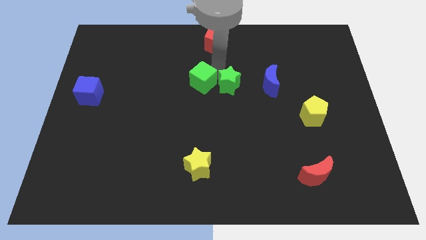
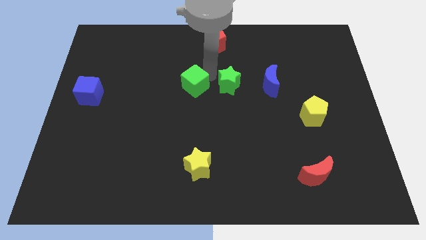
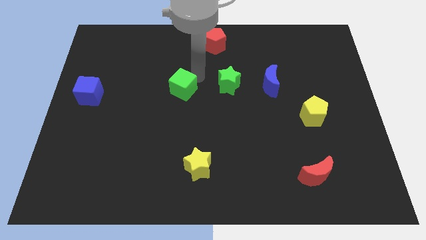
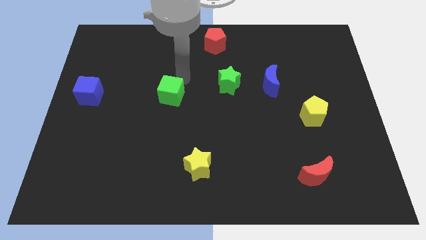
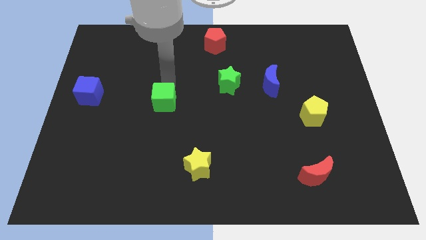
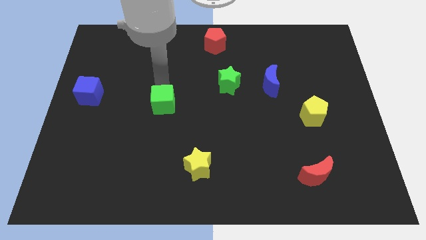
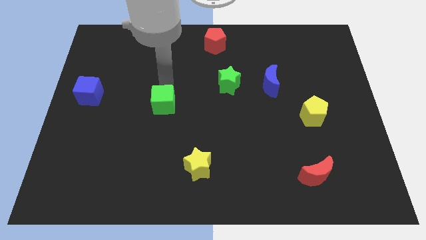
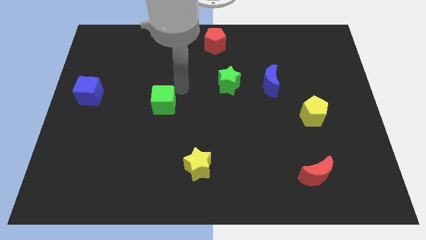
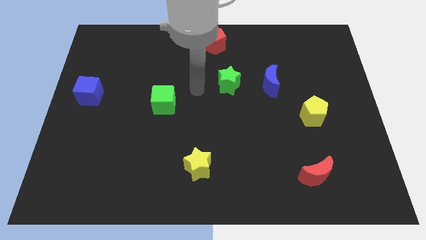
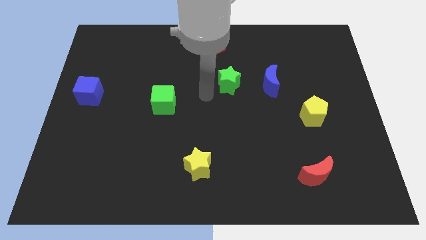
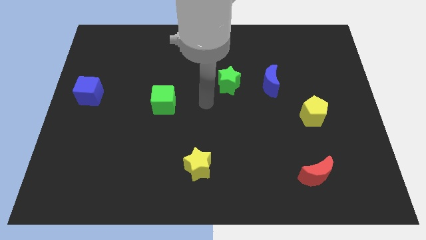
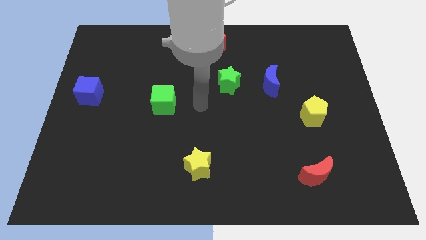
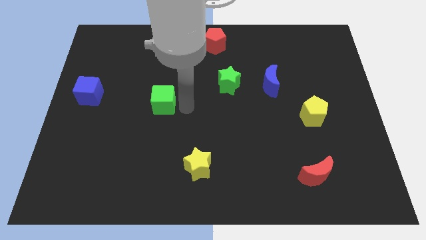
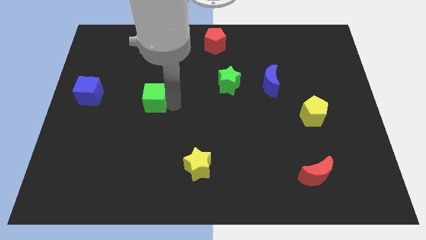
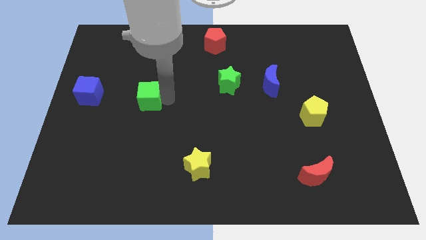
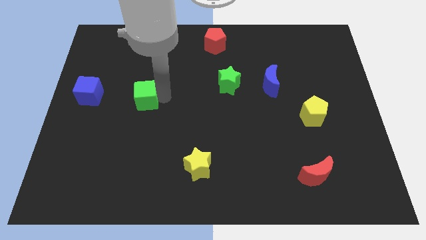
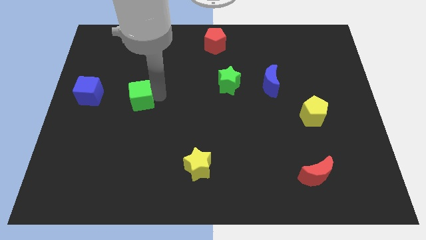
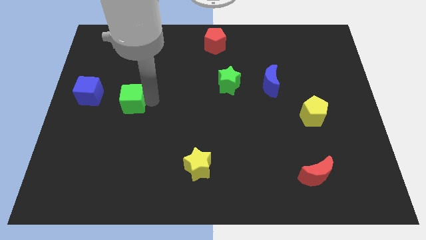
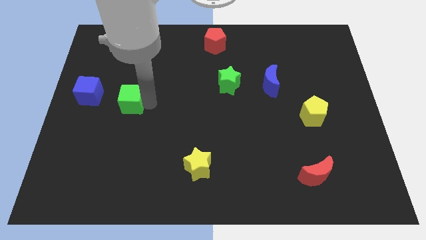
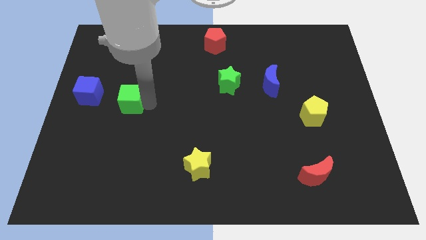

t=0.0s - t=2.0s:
move the green cube to the right of the blue cube

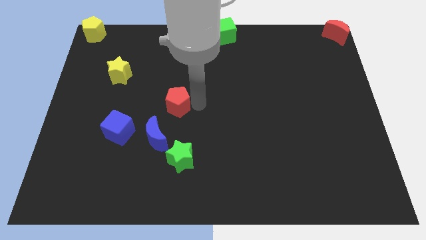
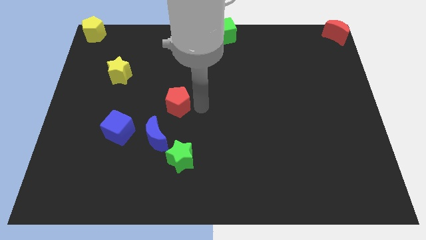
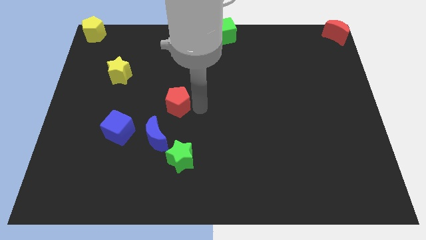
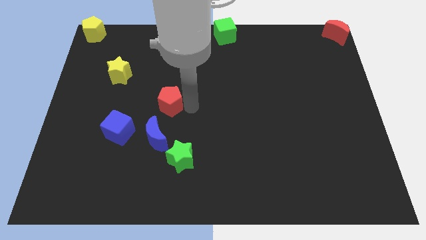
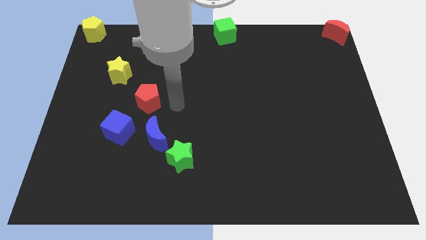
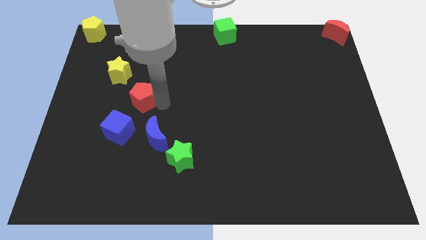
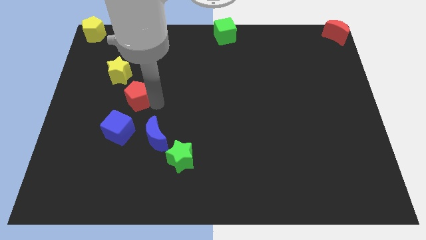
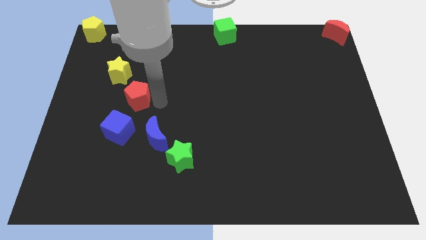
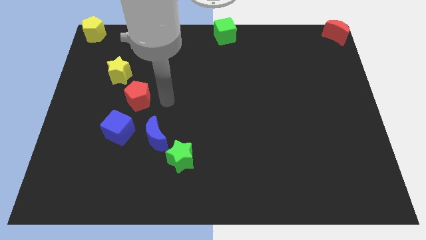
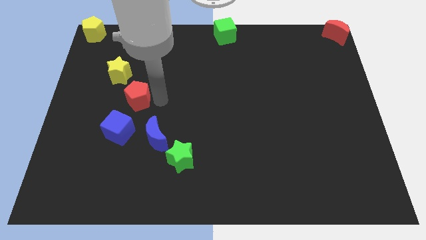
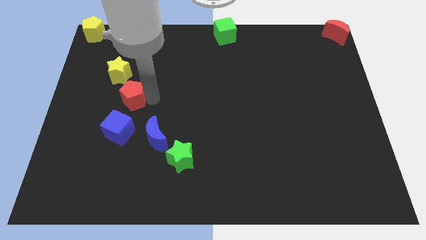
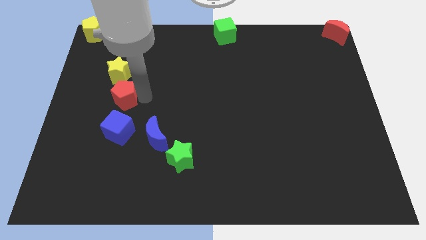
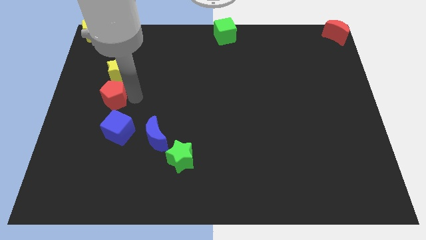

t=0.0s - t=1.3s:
push the red pentagon in a vertical line

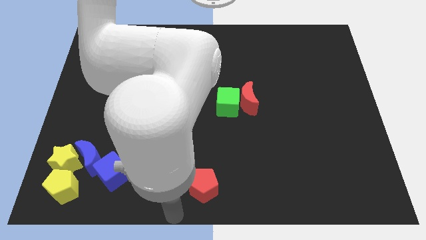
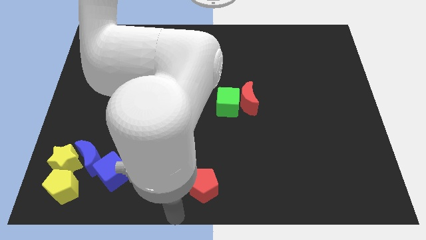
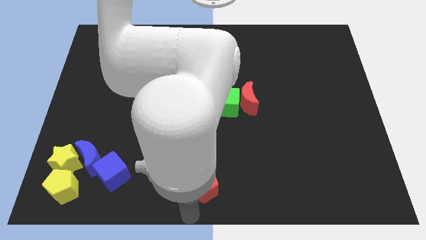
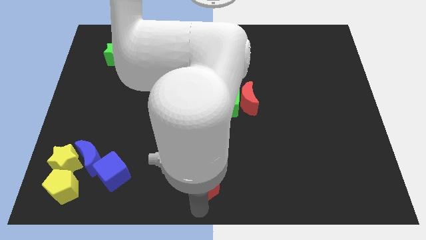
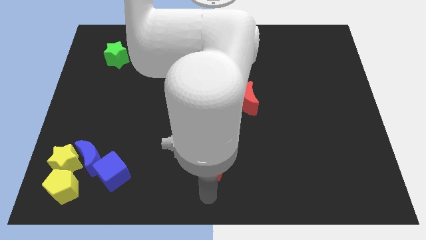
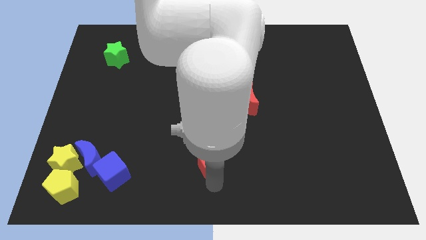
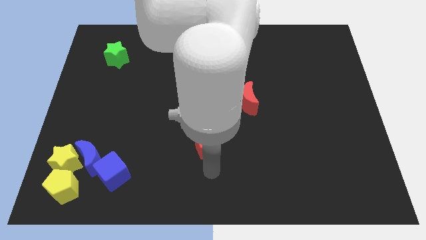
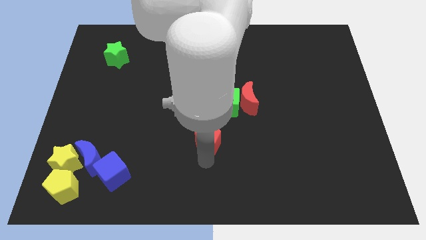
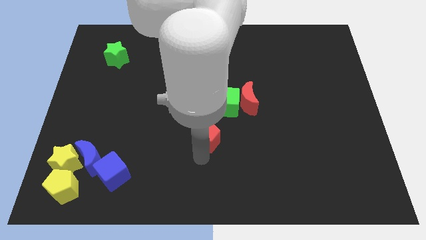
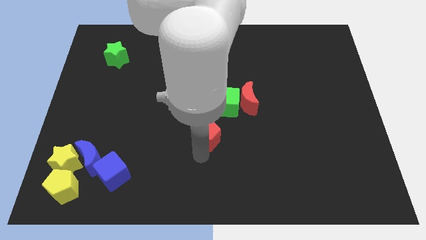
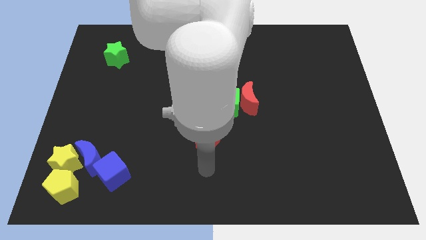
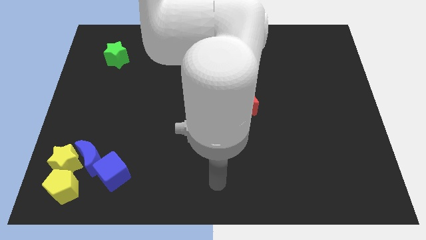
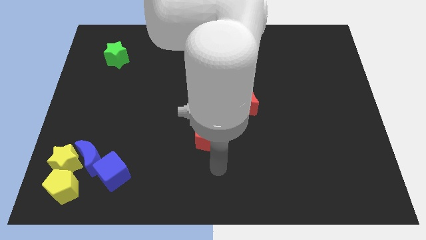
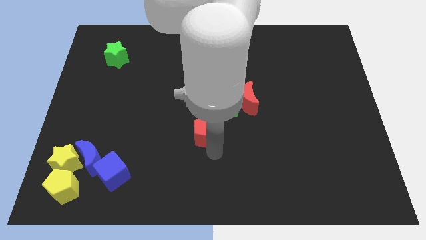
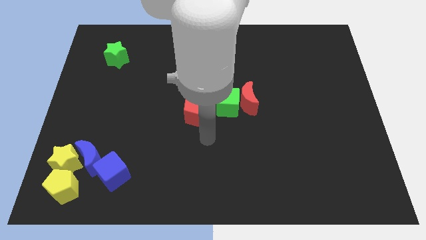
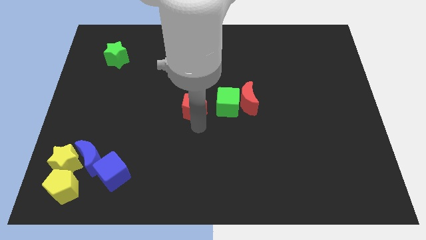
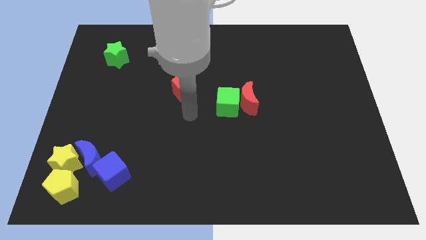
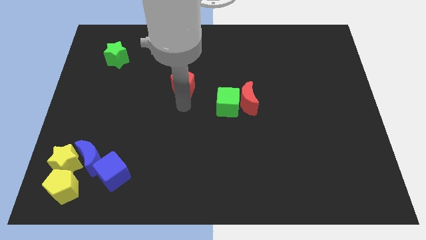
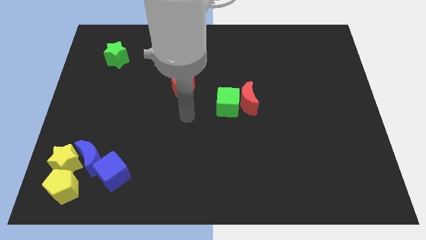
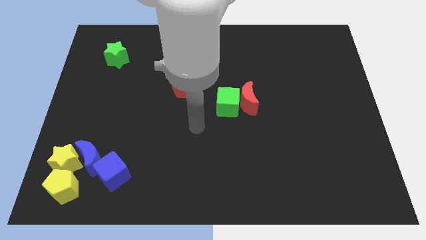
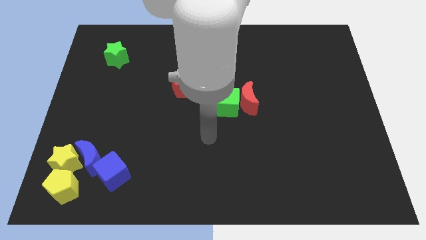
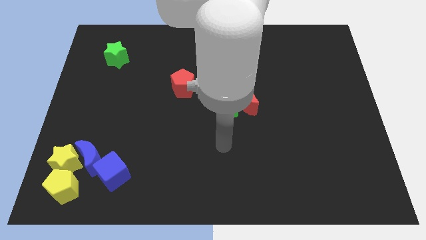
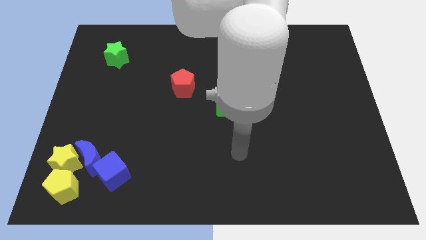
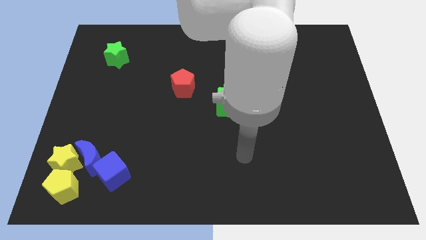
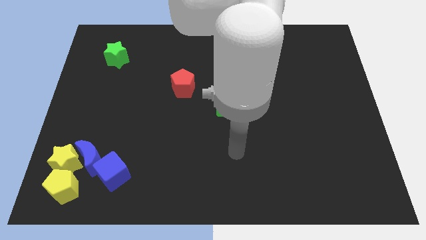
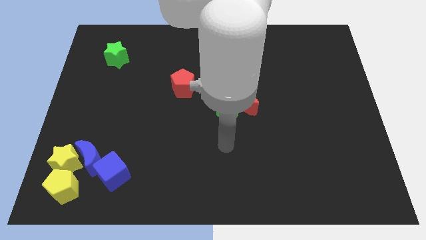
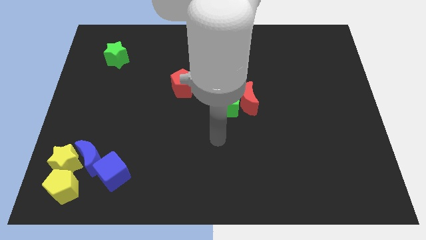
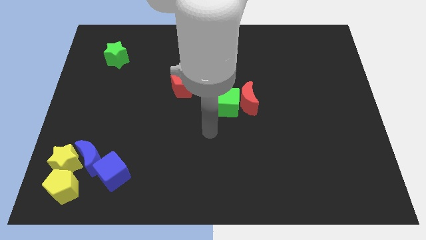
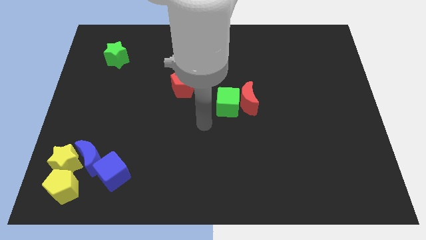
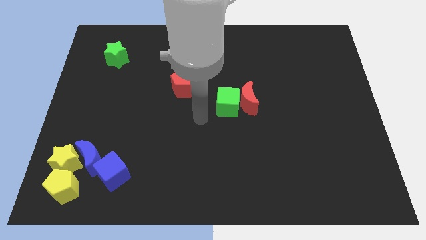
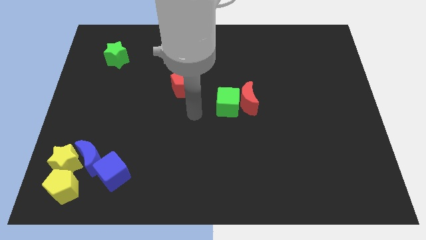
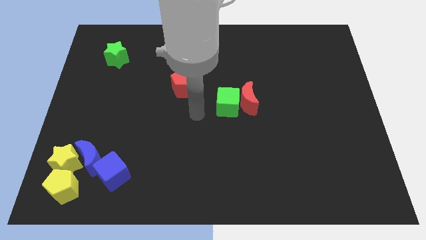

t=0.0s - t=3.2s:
move the red pentagon diagonally in between the green star and green cube

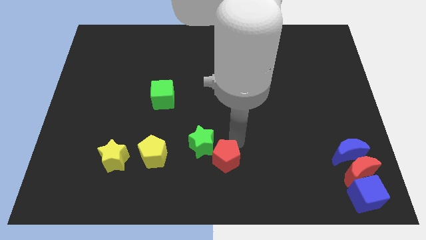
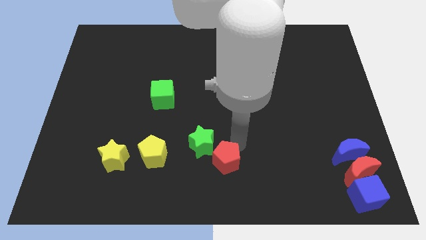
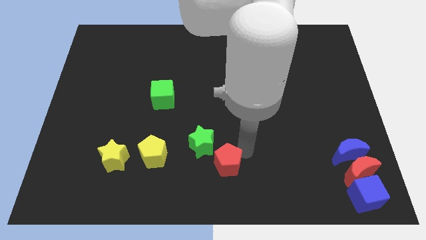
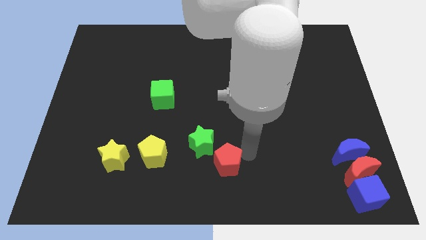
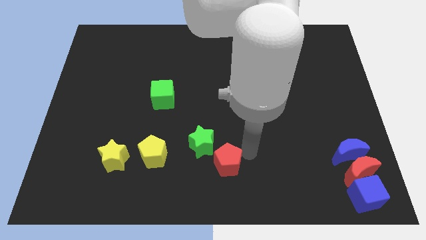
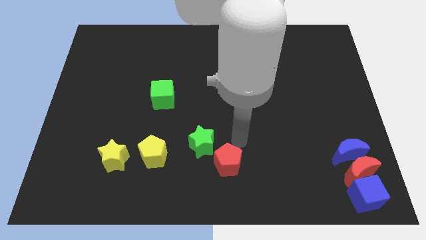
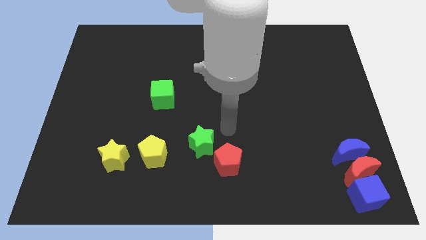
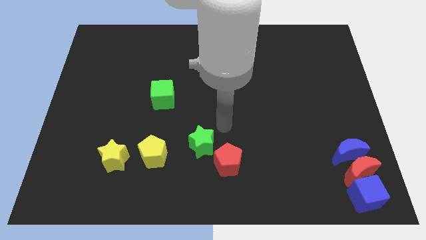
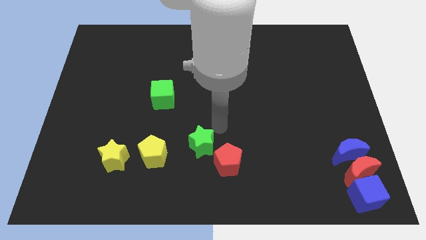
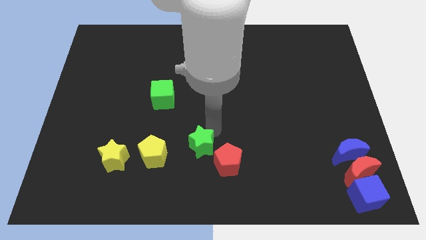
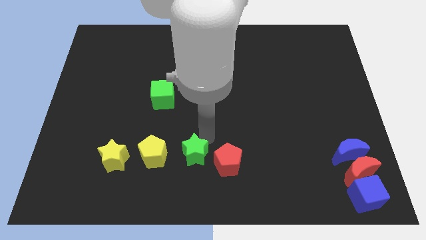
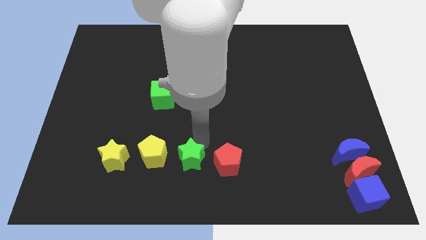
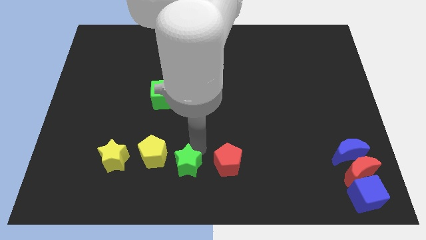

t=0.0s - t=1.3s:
push the green star diagonally bottom right to the yellow pentagon

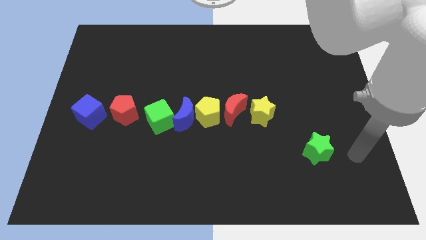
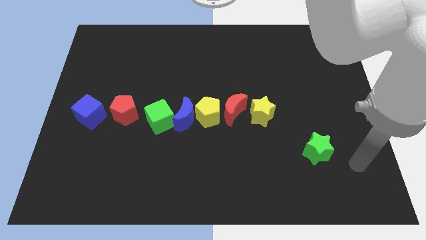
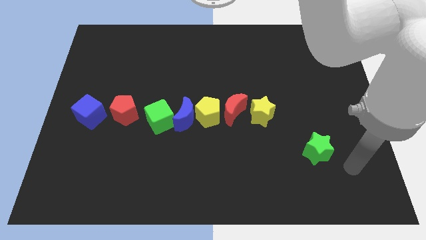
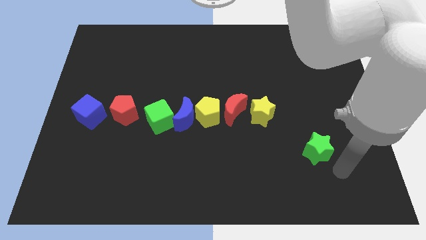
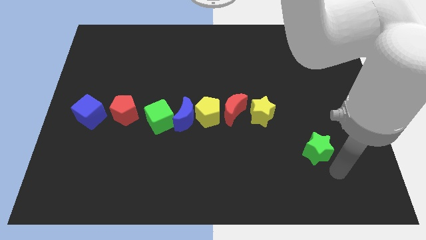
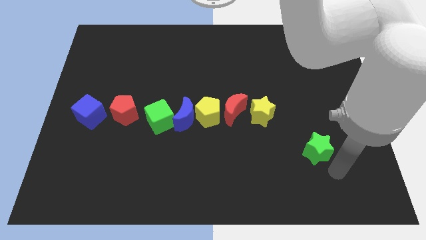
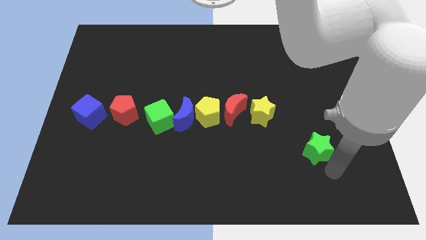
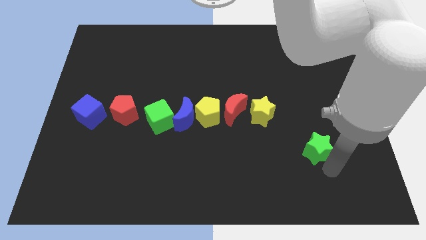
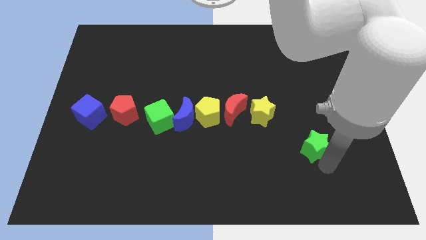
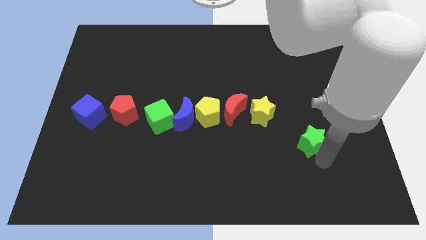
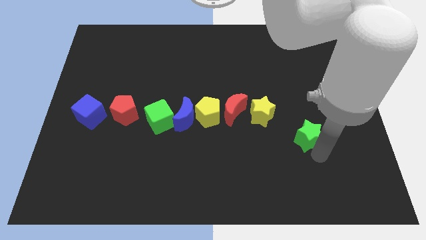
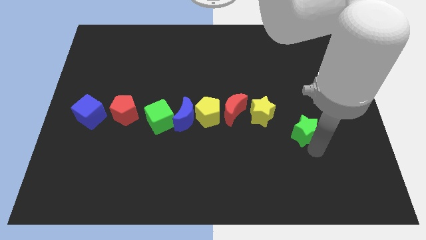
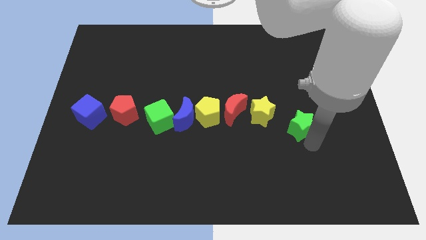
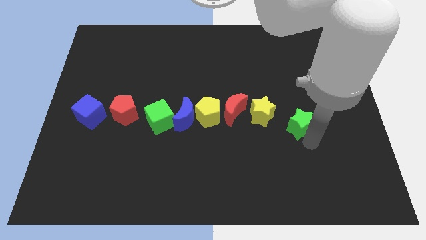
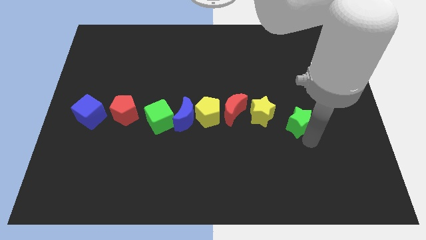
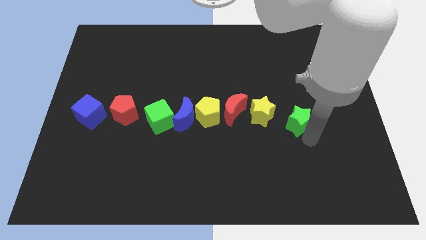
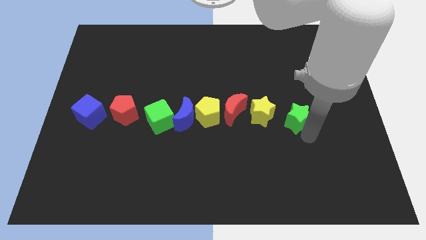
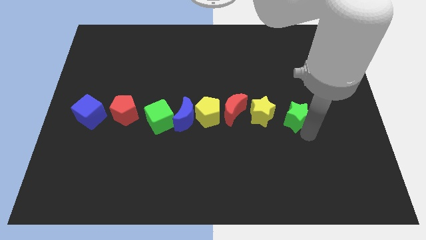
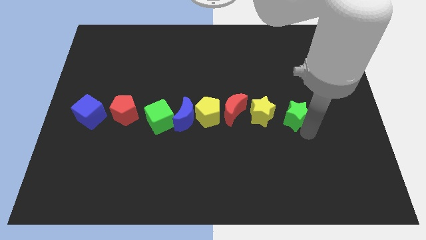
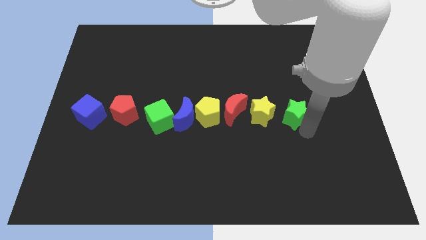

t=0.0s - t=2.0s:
push the green star slightly towards up
